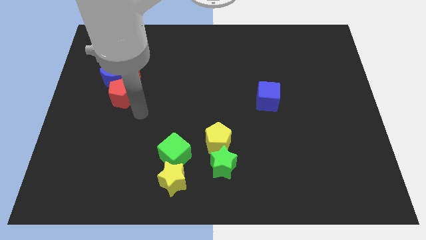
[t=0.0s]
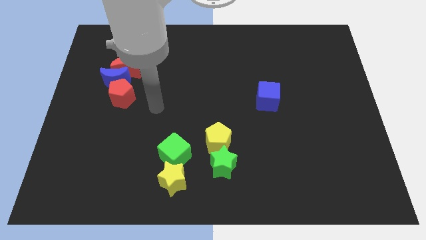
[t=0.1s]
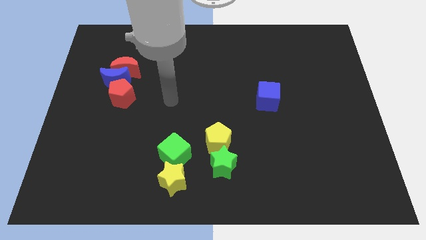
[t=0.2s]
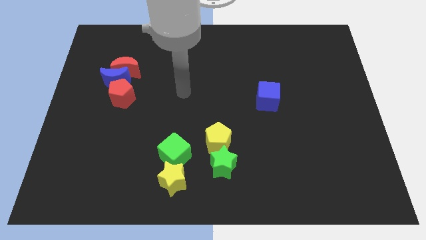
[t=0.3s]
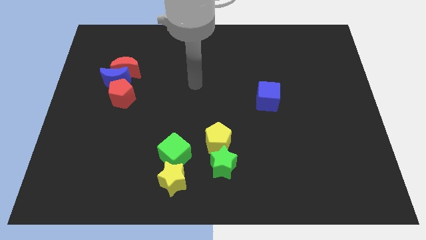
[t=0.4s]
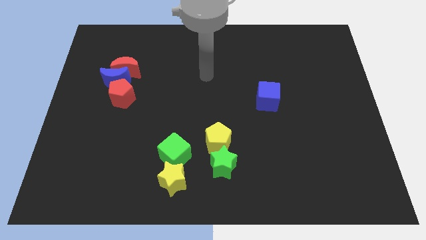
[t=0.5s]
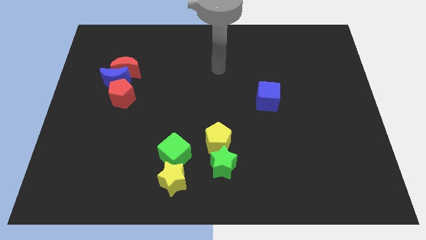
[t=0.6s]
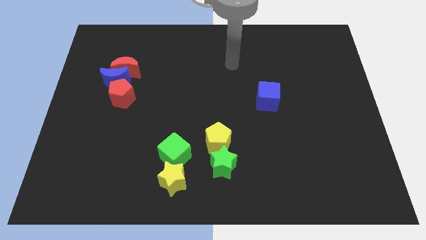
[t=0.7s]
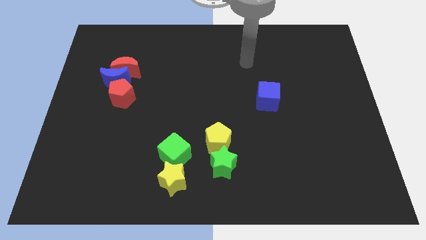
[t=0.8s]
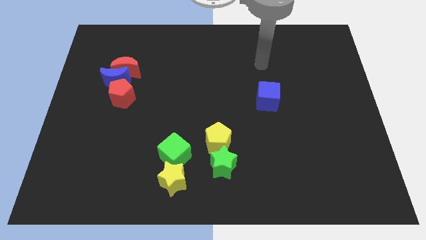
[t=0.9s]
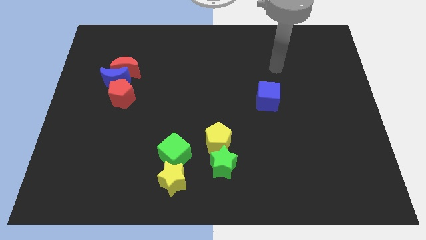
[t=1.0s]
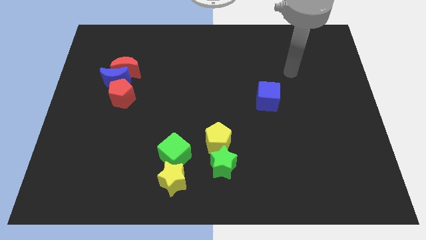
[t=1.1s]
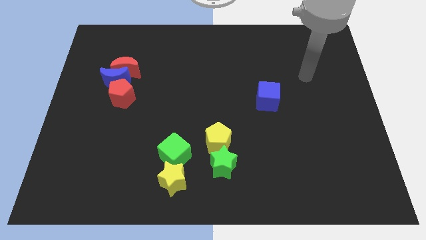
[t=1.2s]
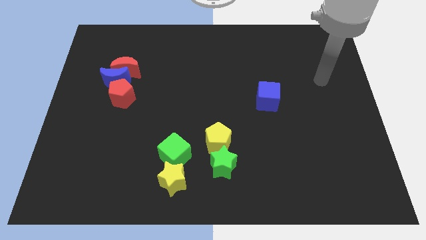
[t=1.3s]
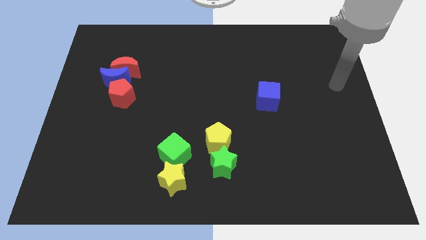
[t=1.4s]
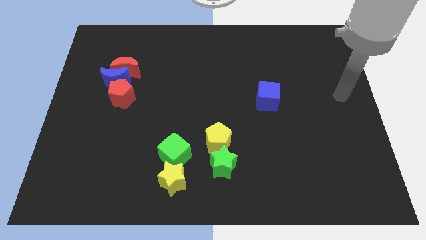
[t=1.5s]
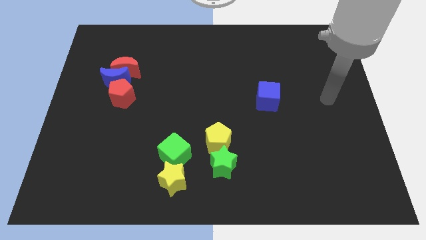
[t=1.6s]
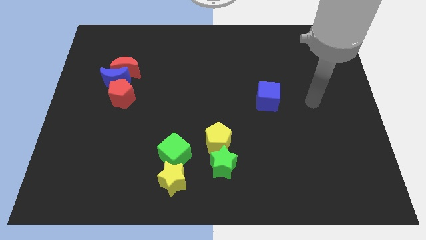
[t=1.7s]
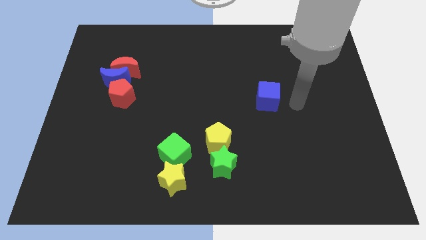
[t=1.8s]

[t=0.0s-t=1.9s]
move your arm towards blue cube

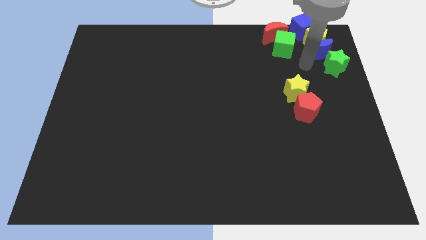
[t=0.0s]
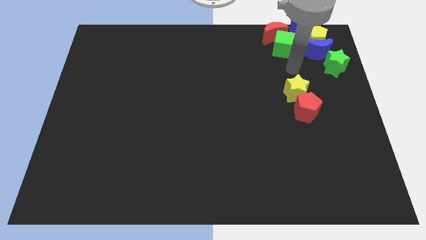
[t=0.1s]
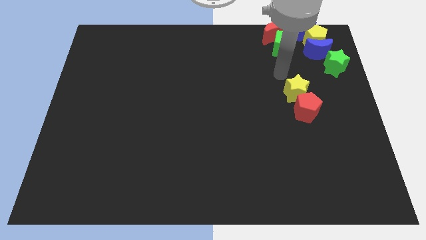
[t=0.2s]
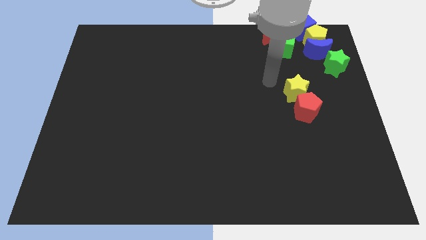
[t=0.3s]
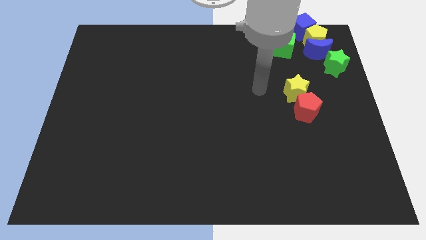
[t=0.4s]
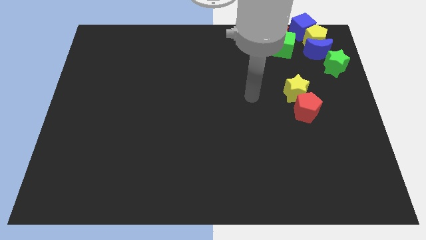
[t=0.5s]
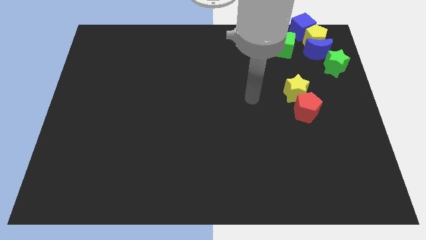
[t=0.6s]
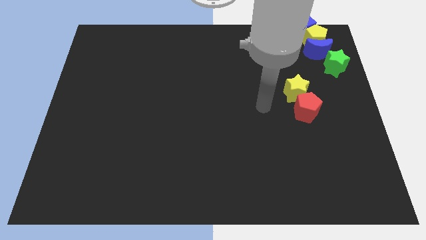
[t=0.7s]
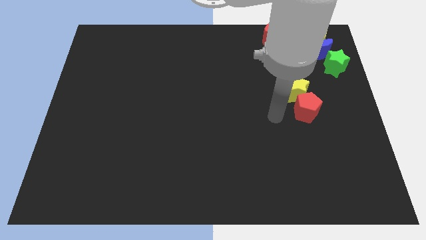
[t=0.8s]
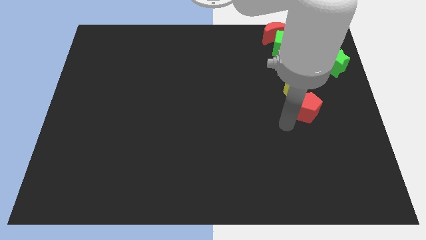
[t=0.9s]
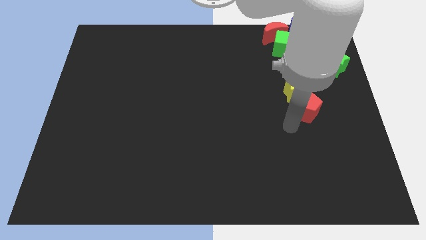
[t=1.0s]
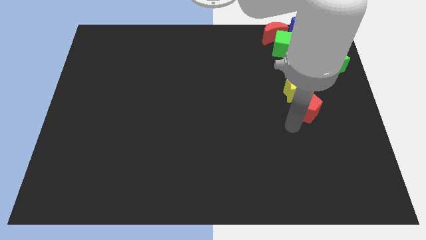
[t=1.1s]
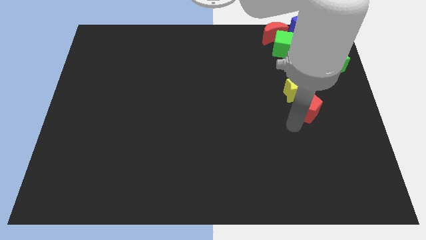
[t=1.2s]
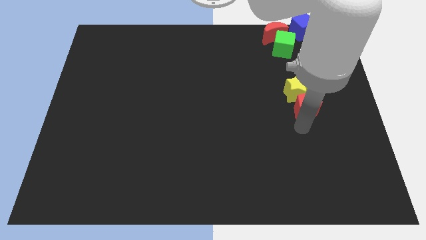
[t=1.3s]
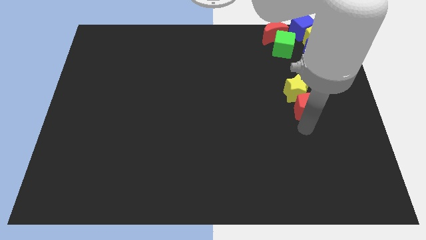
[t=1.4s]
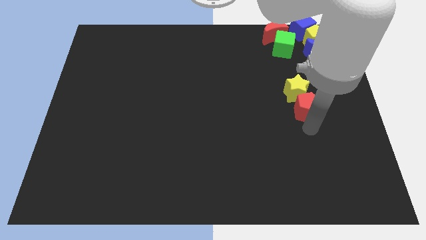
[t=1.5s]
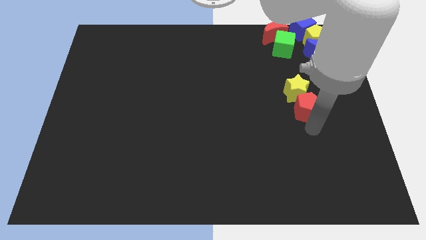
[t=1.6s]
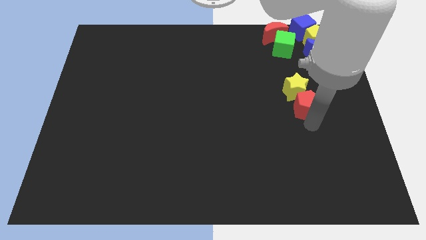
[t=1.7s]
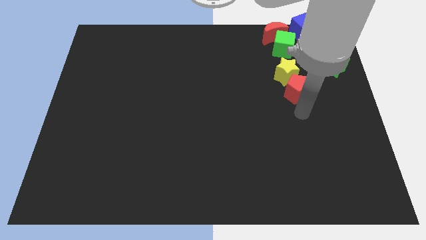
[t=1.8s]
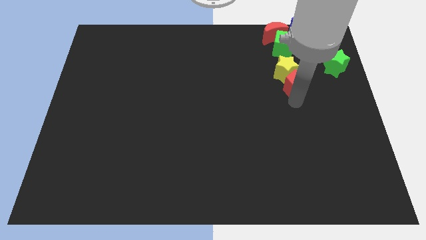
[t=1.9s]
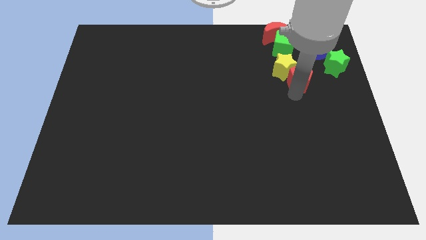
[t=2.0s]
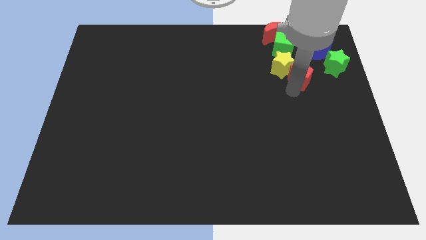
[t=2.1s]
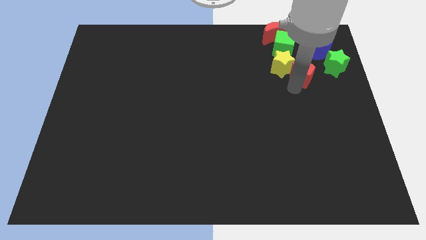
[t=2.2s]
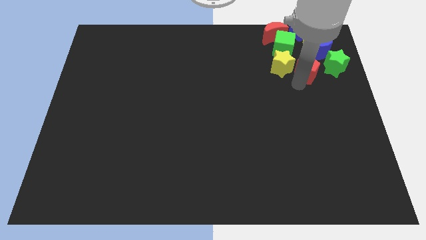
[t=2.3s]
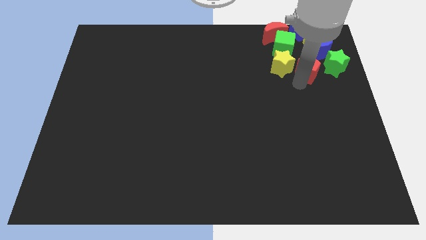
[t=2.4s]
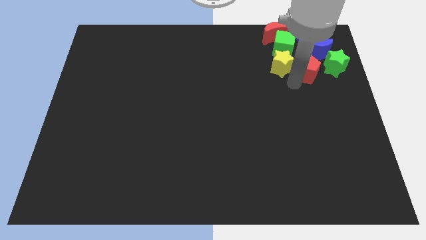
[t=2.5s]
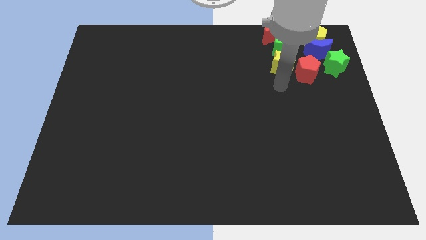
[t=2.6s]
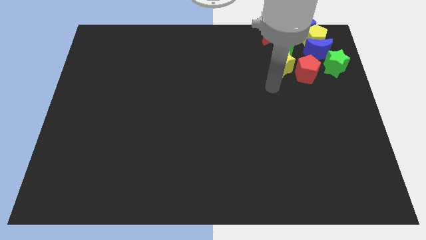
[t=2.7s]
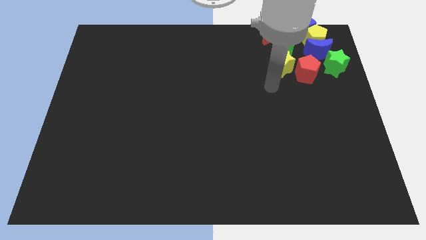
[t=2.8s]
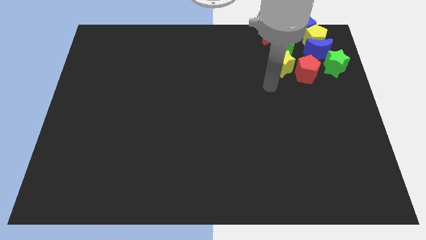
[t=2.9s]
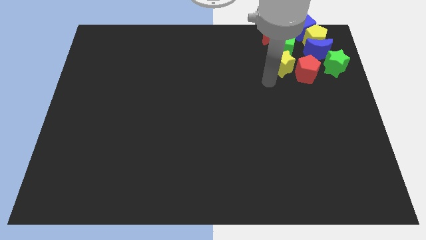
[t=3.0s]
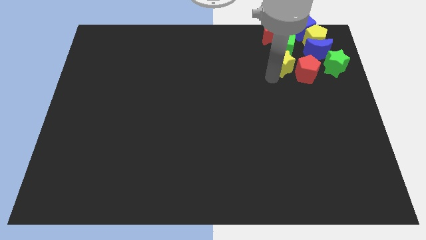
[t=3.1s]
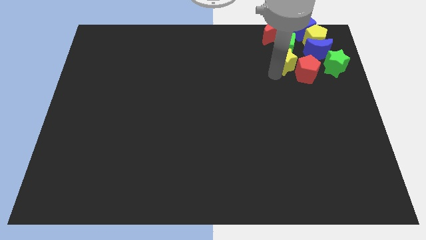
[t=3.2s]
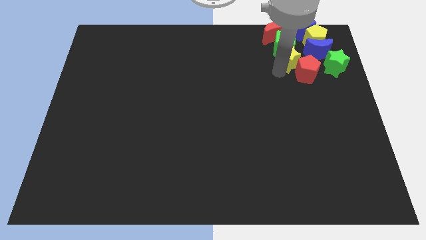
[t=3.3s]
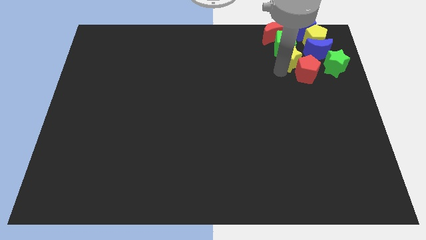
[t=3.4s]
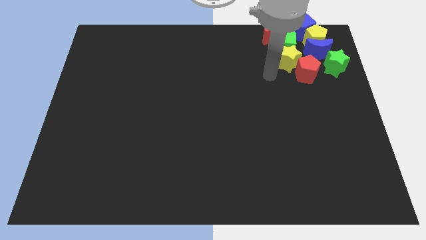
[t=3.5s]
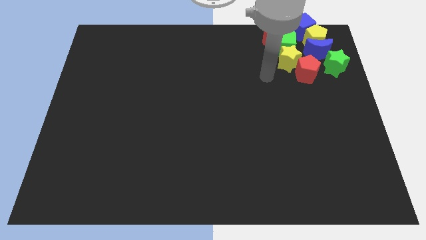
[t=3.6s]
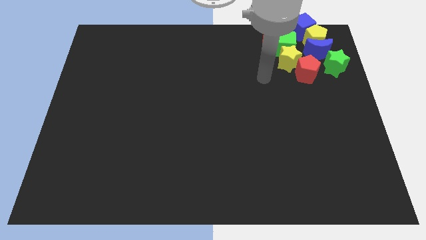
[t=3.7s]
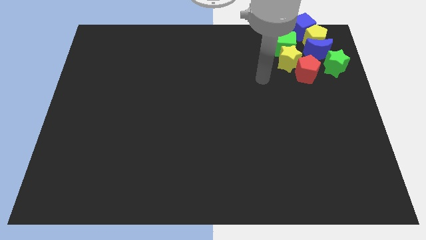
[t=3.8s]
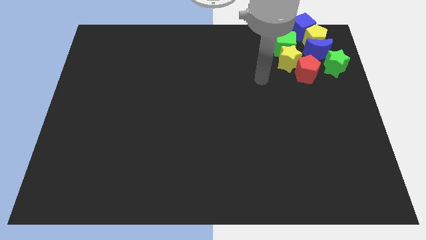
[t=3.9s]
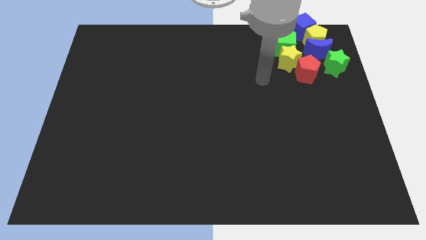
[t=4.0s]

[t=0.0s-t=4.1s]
push the yellow star and red pentagon into the group of blocks

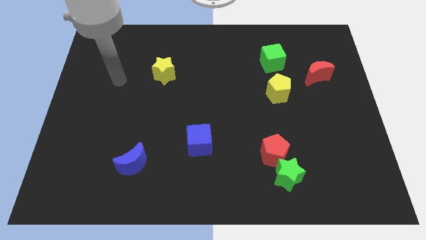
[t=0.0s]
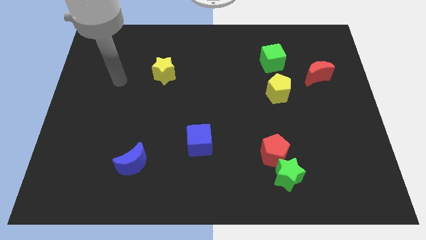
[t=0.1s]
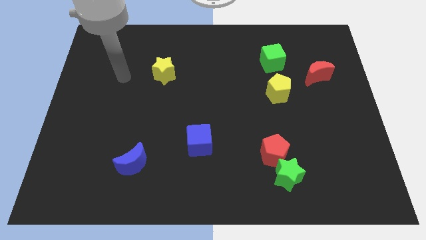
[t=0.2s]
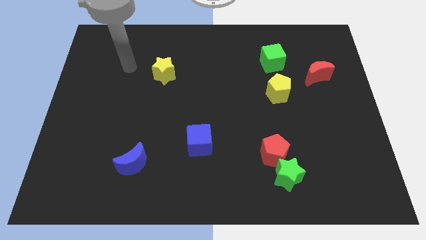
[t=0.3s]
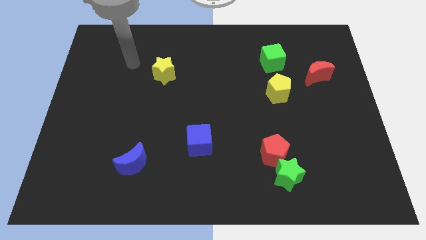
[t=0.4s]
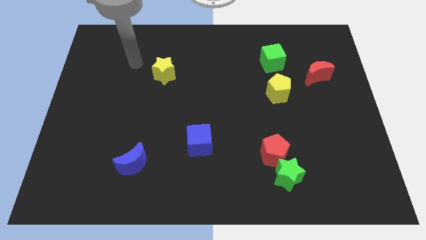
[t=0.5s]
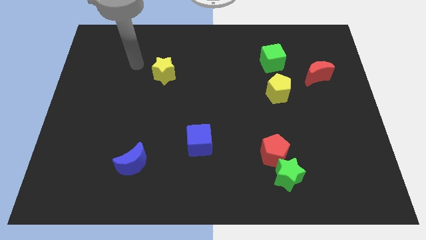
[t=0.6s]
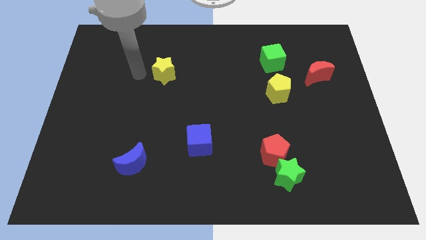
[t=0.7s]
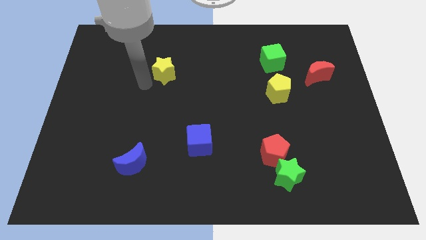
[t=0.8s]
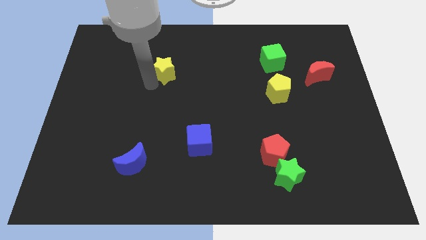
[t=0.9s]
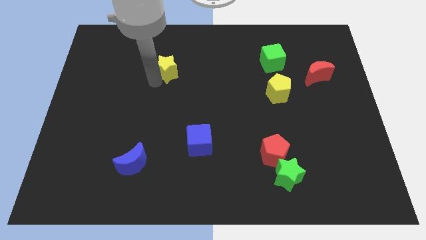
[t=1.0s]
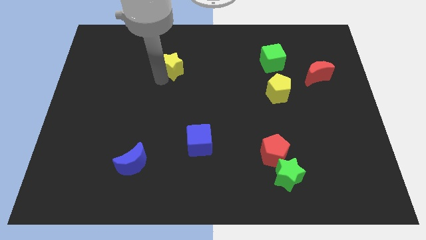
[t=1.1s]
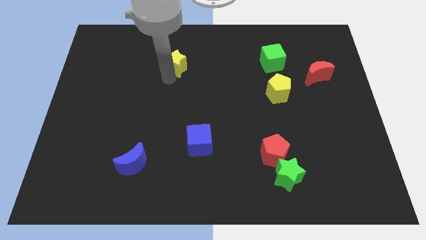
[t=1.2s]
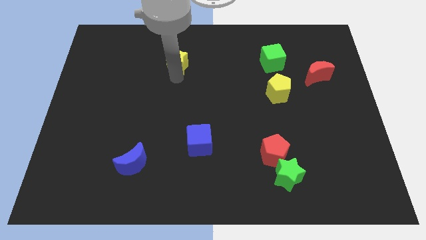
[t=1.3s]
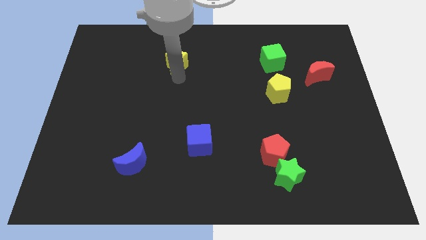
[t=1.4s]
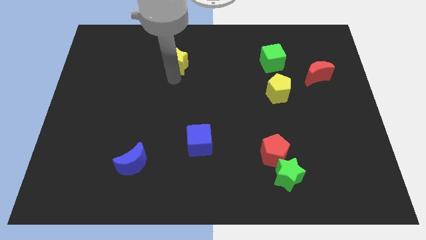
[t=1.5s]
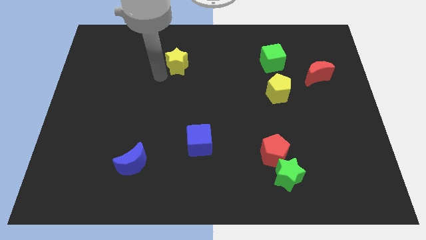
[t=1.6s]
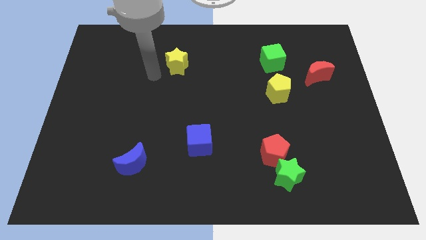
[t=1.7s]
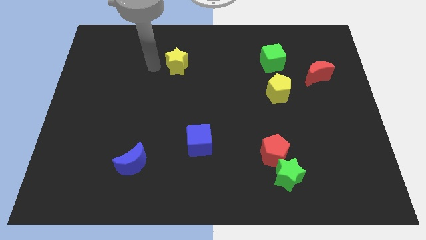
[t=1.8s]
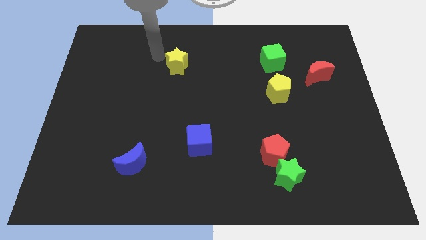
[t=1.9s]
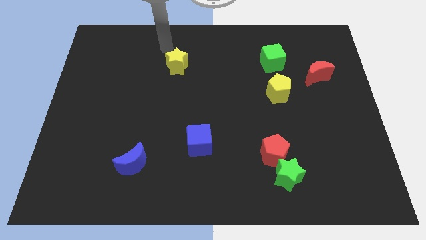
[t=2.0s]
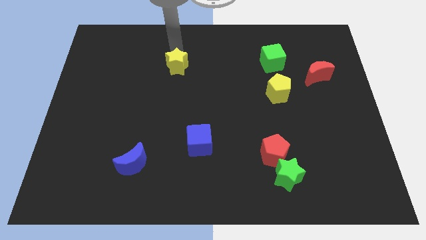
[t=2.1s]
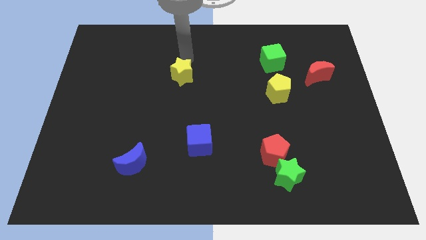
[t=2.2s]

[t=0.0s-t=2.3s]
place the arm over the green star

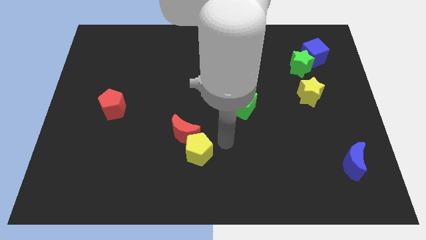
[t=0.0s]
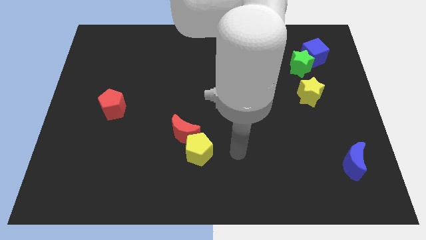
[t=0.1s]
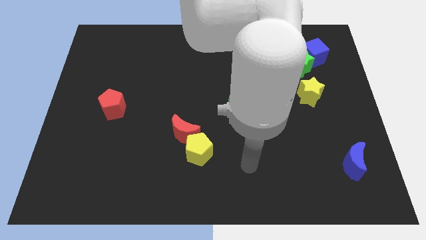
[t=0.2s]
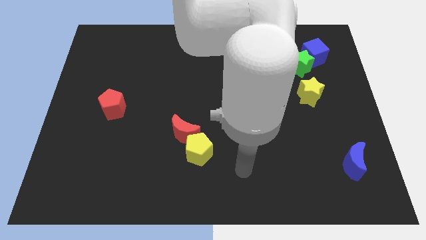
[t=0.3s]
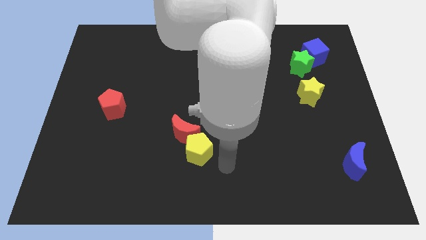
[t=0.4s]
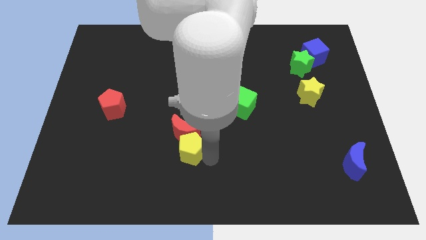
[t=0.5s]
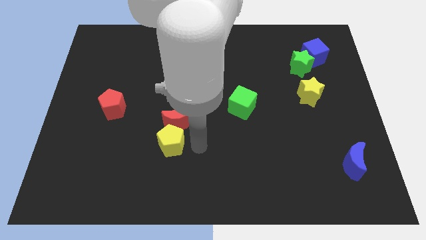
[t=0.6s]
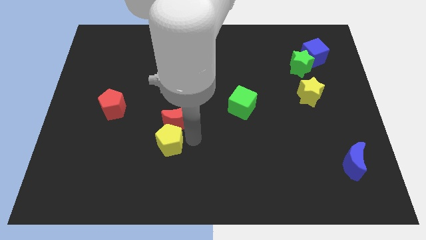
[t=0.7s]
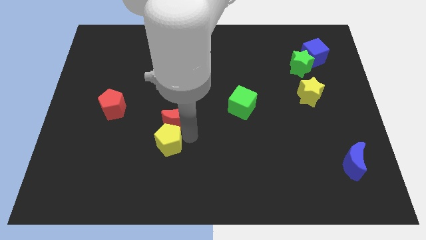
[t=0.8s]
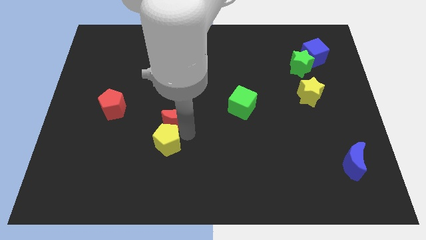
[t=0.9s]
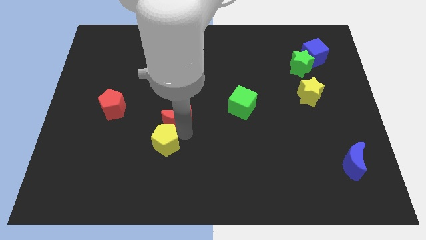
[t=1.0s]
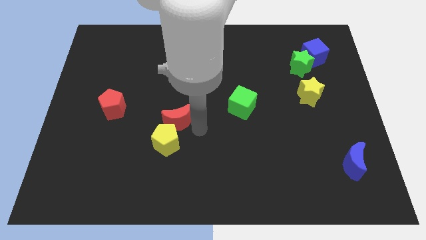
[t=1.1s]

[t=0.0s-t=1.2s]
push the red moon with yellow pentagon
